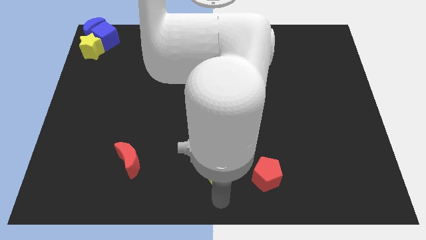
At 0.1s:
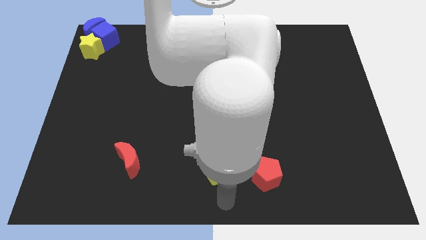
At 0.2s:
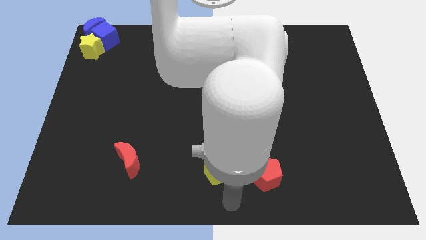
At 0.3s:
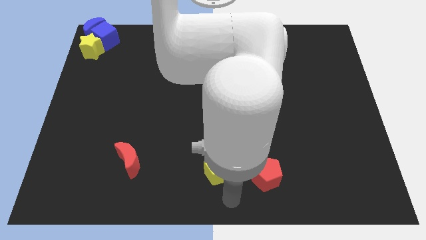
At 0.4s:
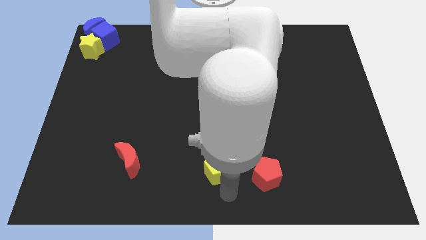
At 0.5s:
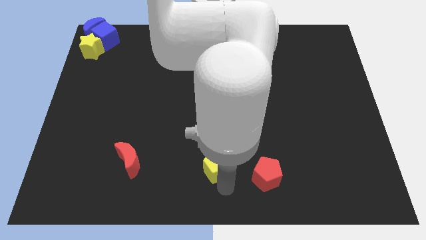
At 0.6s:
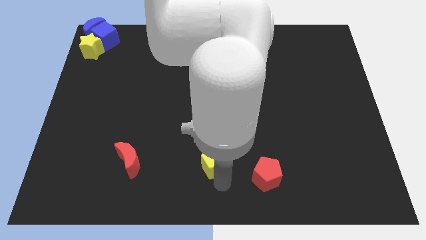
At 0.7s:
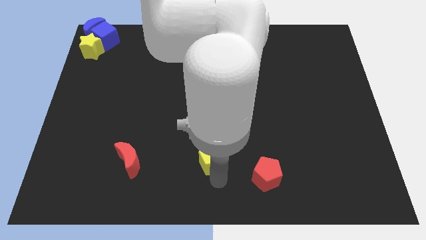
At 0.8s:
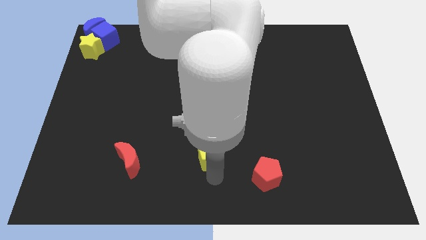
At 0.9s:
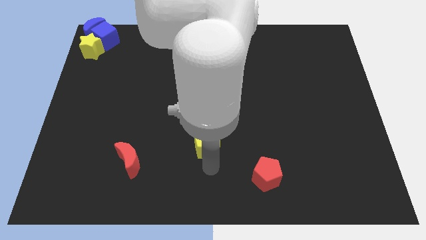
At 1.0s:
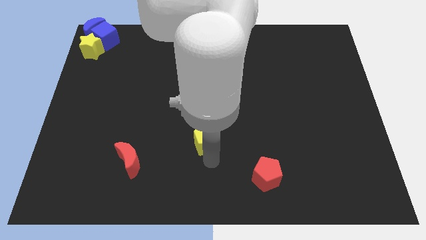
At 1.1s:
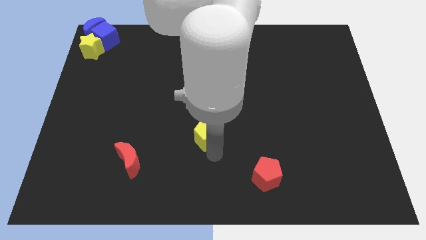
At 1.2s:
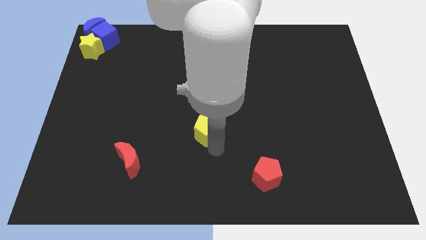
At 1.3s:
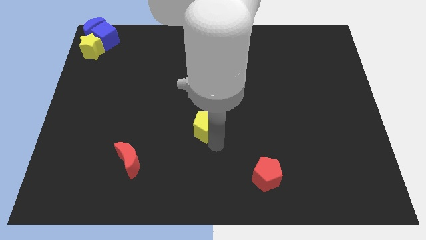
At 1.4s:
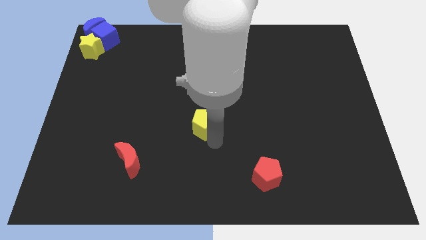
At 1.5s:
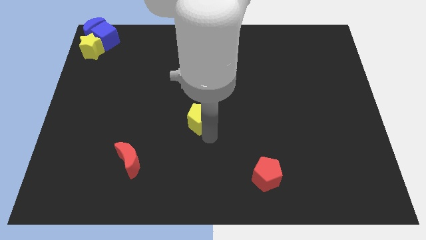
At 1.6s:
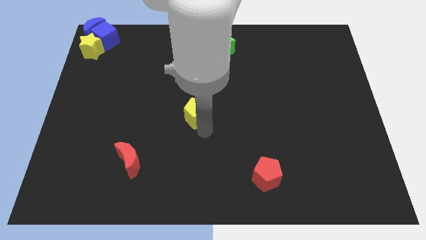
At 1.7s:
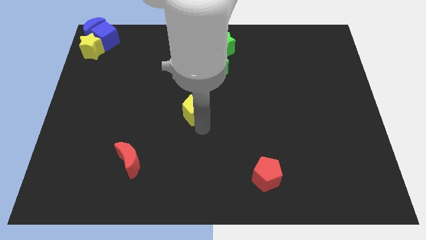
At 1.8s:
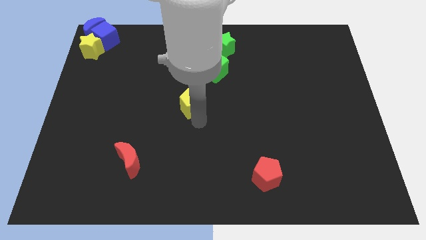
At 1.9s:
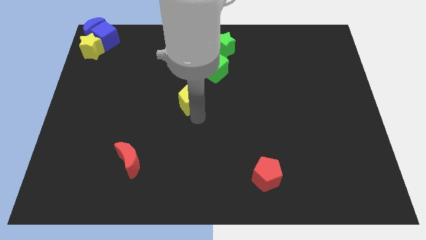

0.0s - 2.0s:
slide the yellow pentagon to the center

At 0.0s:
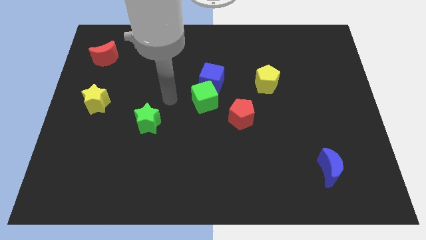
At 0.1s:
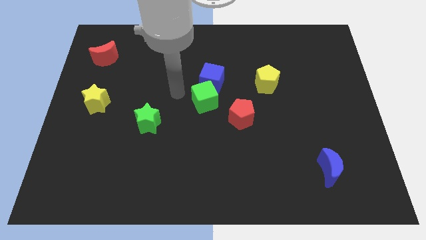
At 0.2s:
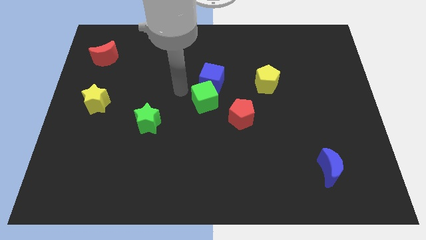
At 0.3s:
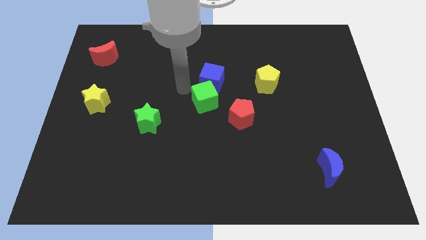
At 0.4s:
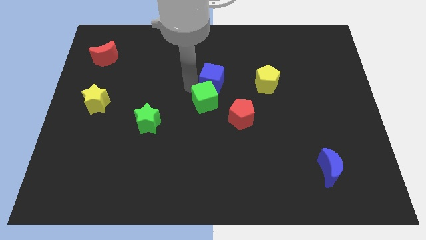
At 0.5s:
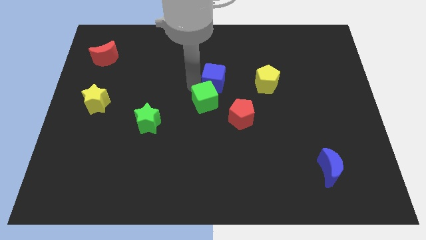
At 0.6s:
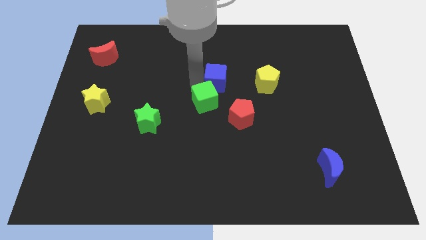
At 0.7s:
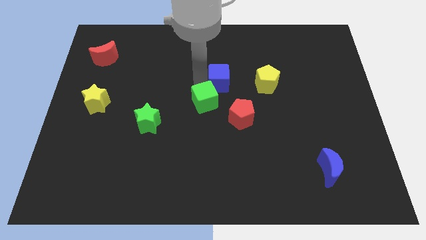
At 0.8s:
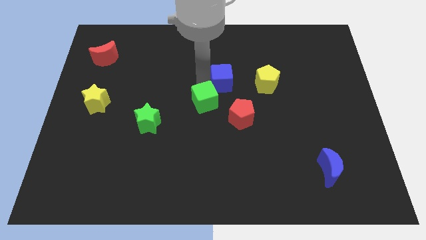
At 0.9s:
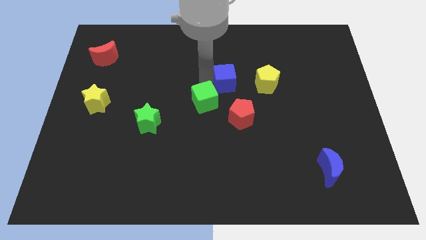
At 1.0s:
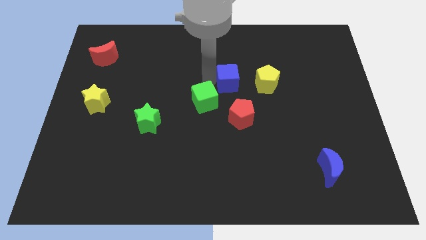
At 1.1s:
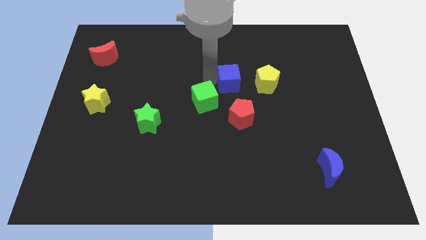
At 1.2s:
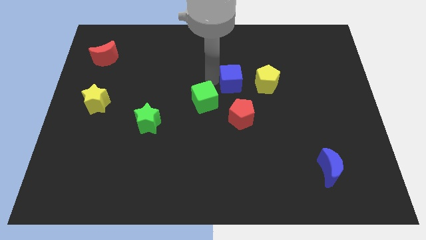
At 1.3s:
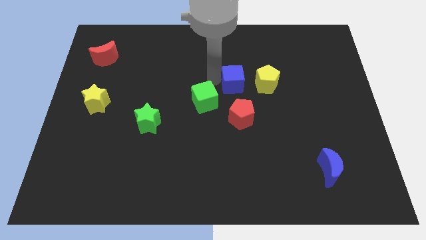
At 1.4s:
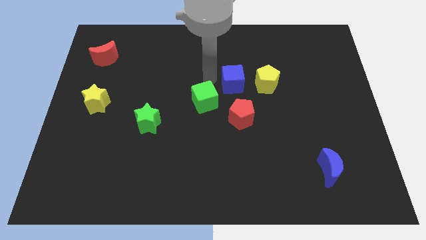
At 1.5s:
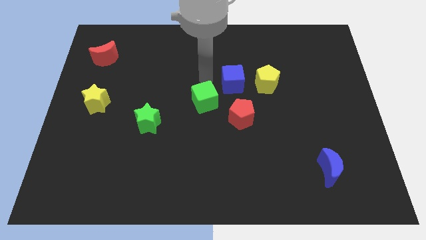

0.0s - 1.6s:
place the blue cube to the left of yellow pentagon

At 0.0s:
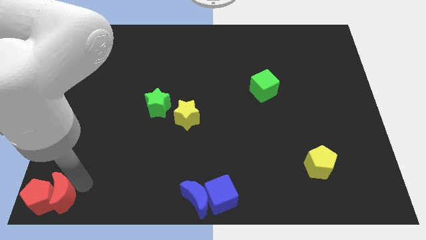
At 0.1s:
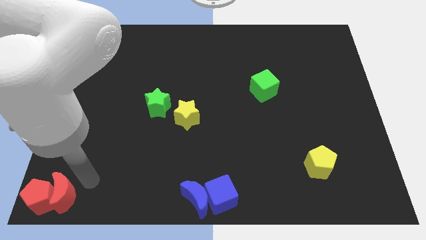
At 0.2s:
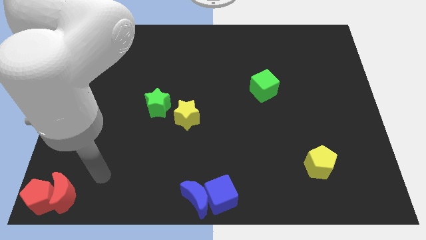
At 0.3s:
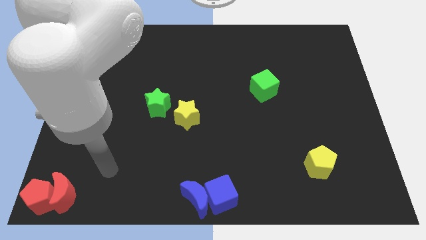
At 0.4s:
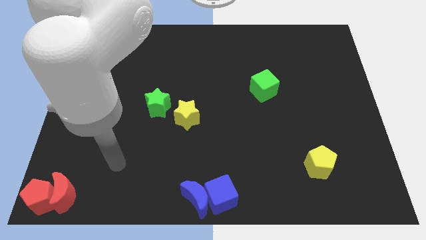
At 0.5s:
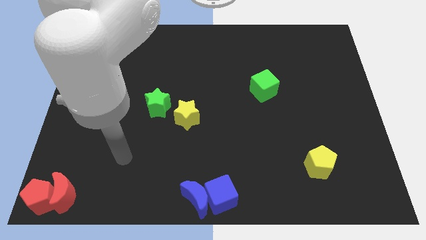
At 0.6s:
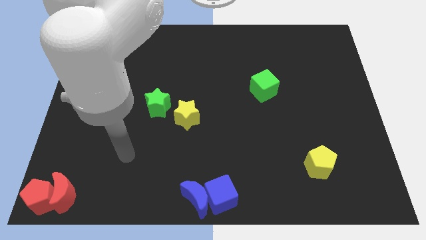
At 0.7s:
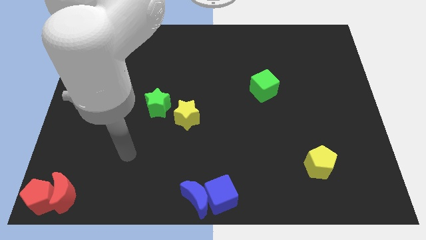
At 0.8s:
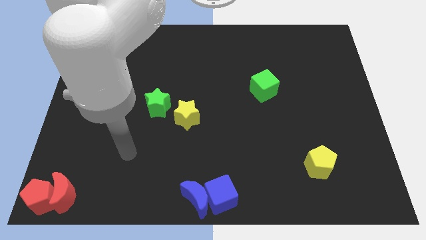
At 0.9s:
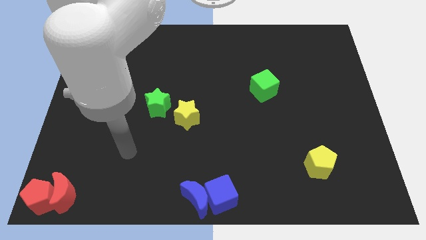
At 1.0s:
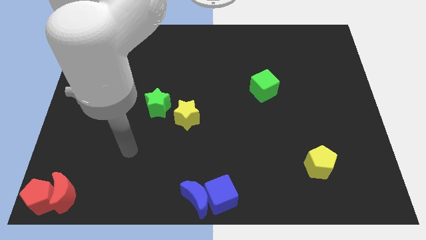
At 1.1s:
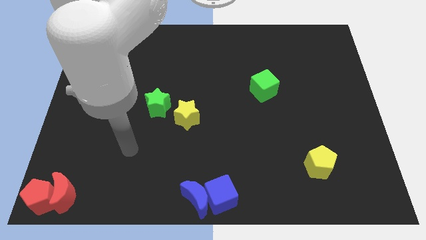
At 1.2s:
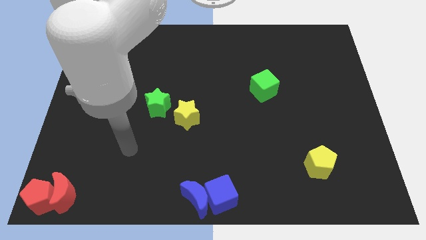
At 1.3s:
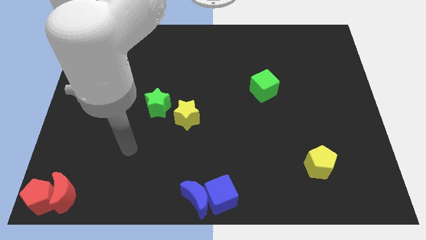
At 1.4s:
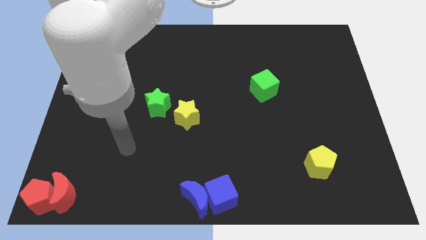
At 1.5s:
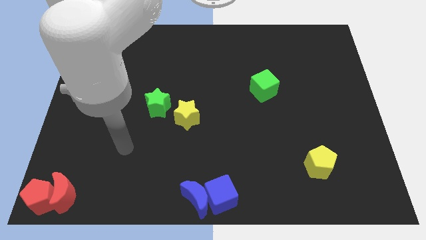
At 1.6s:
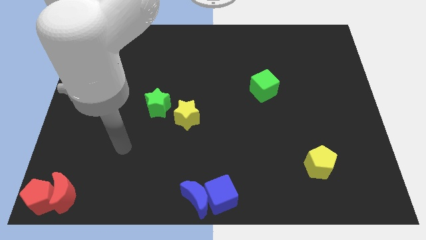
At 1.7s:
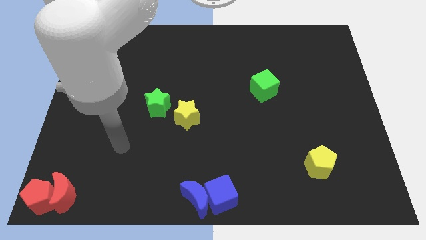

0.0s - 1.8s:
go away from the red moon

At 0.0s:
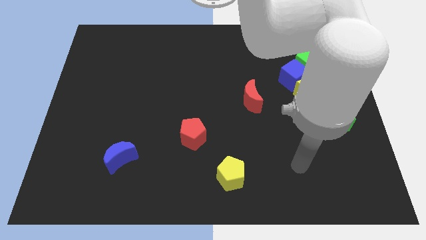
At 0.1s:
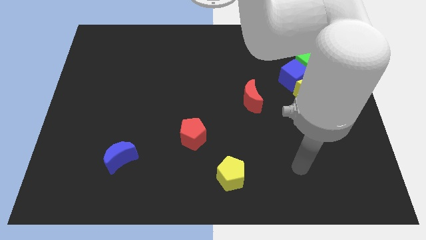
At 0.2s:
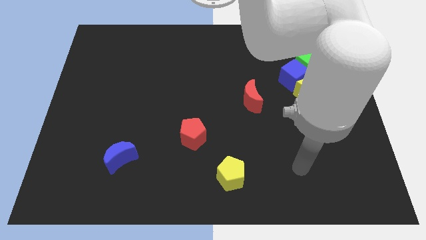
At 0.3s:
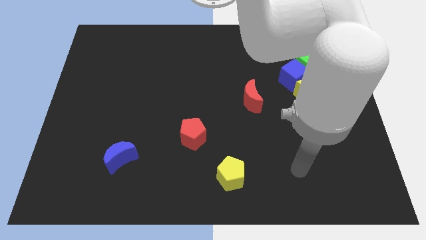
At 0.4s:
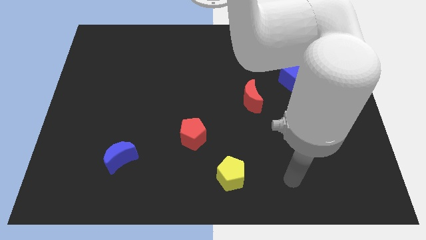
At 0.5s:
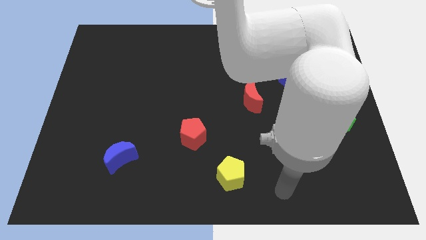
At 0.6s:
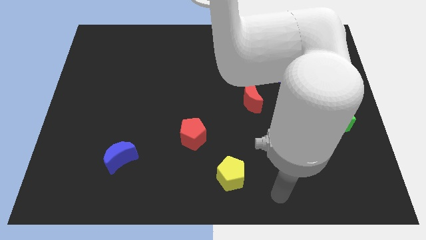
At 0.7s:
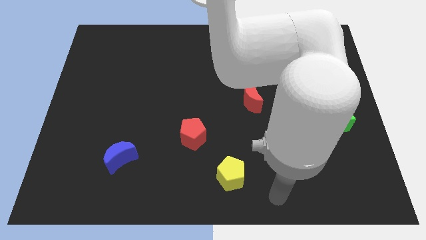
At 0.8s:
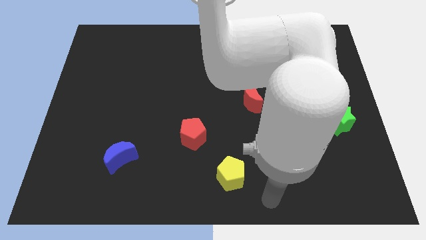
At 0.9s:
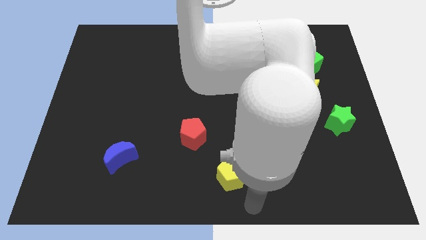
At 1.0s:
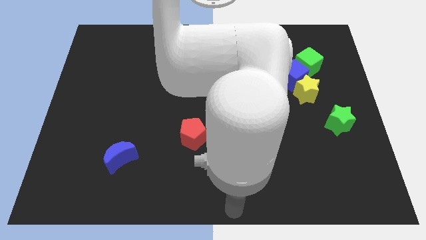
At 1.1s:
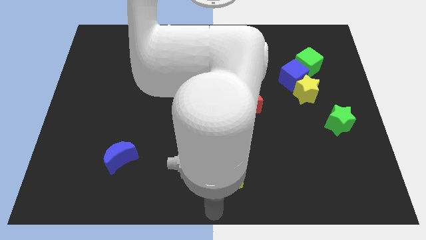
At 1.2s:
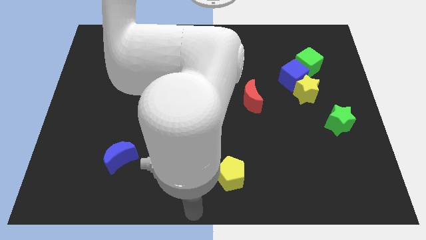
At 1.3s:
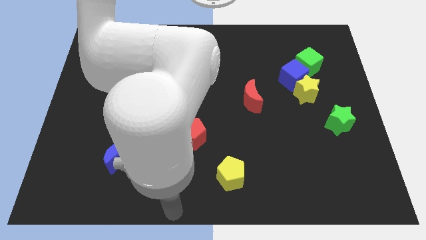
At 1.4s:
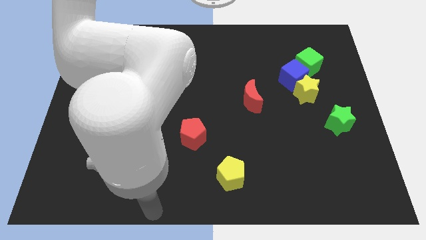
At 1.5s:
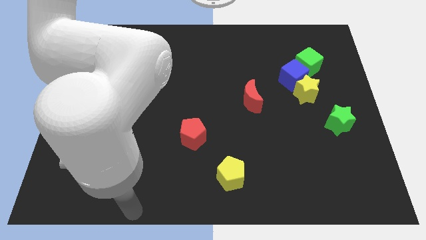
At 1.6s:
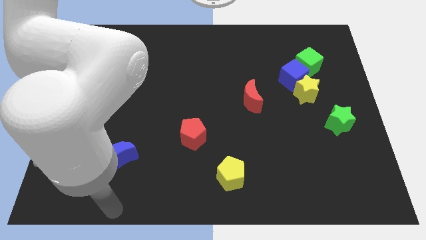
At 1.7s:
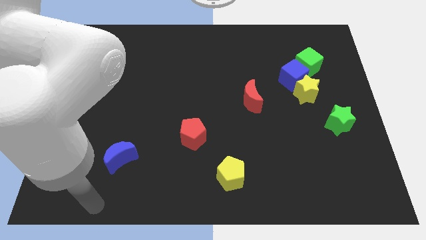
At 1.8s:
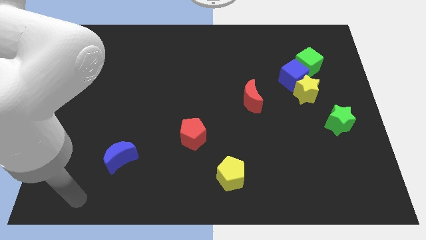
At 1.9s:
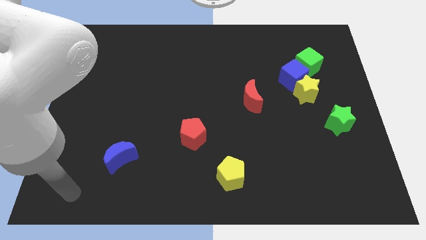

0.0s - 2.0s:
move the arm towards the bottom left side of blue crescent

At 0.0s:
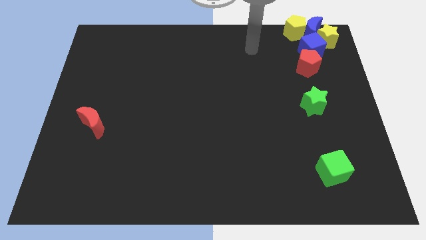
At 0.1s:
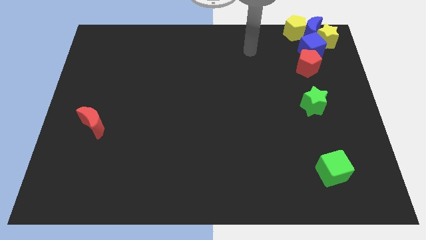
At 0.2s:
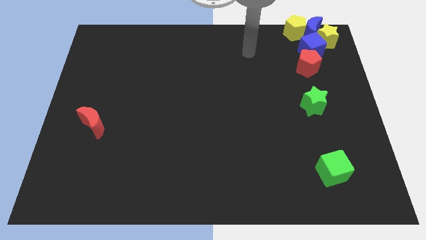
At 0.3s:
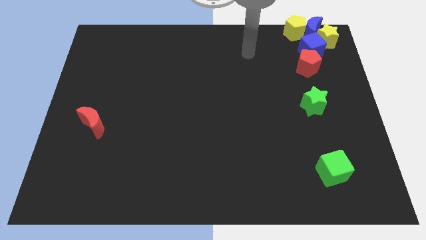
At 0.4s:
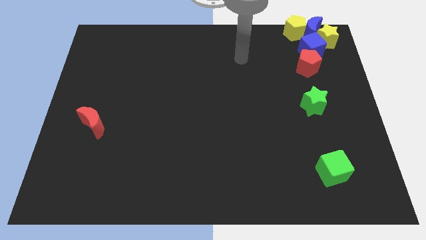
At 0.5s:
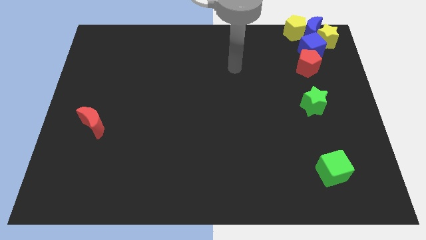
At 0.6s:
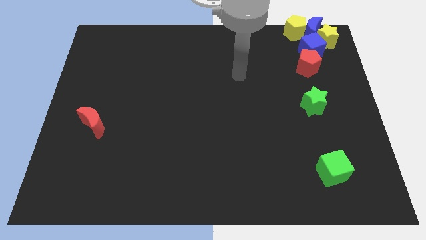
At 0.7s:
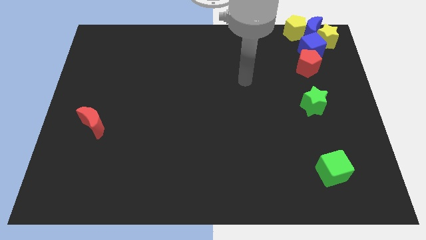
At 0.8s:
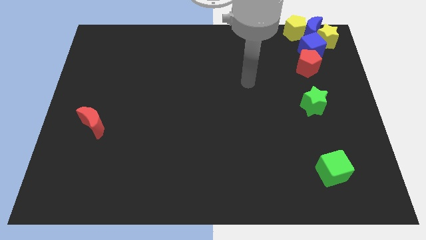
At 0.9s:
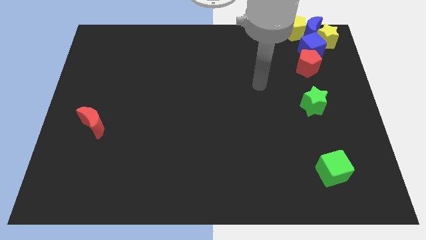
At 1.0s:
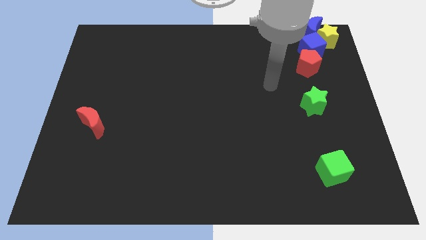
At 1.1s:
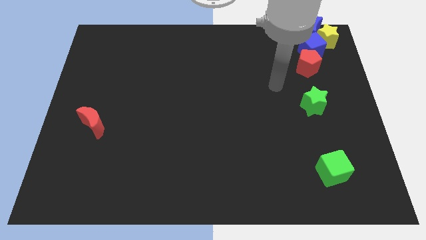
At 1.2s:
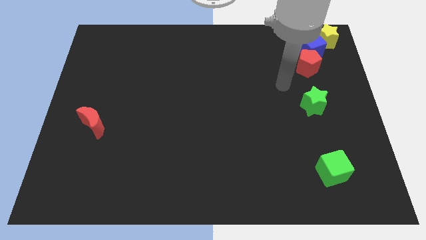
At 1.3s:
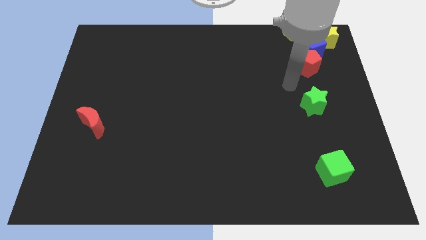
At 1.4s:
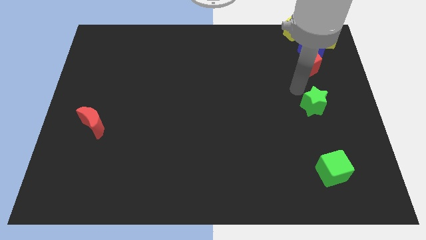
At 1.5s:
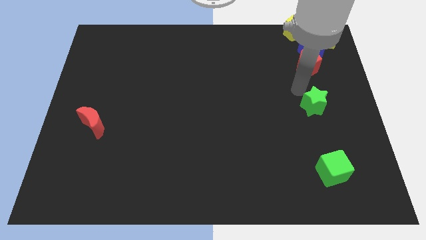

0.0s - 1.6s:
point your arm at the top of the green star
